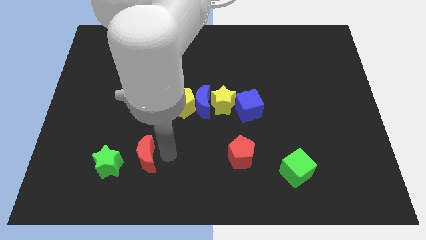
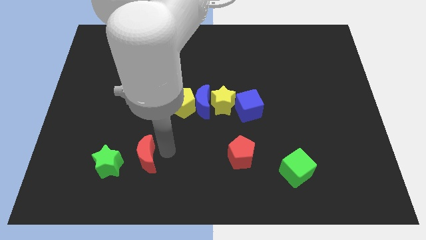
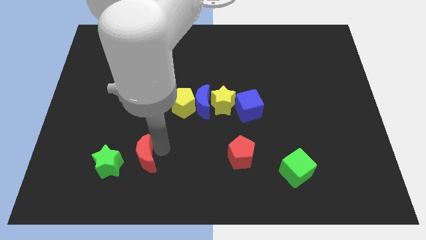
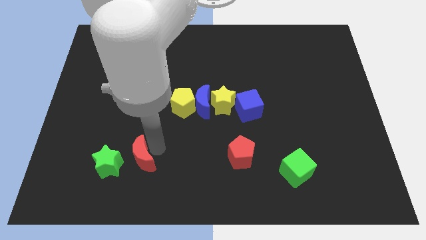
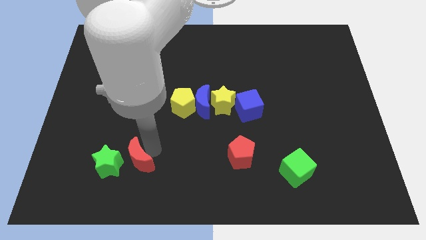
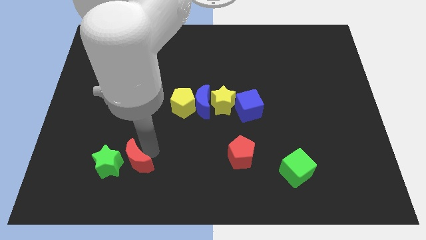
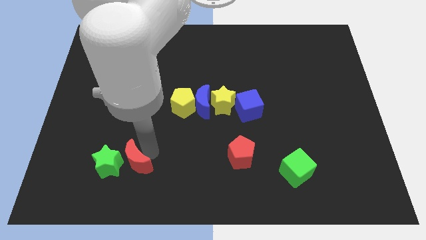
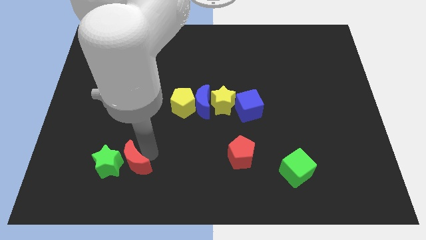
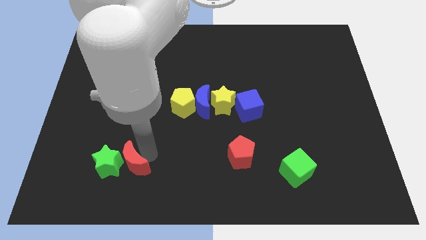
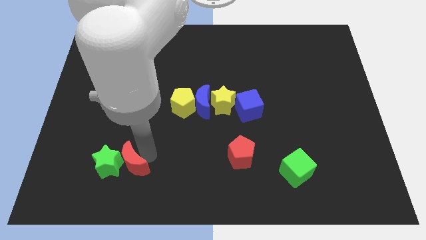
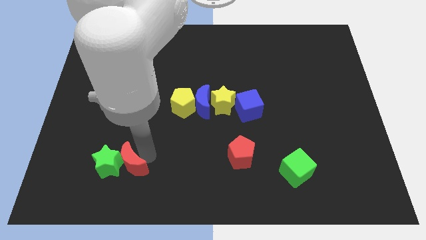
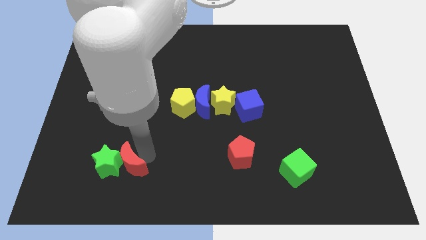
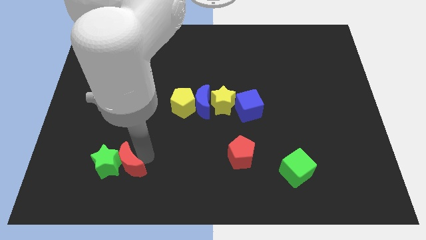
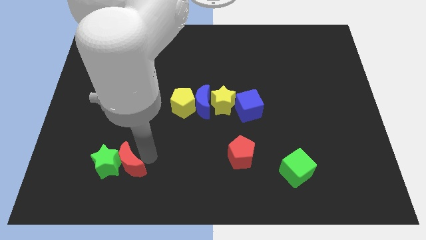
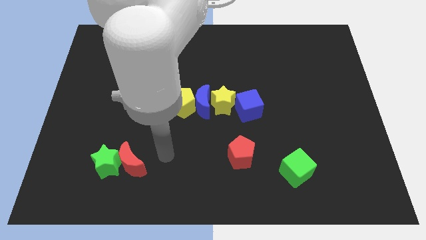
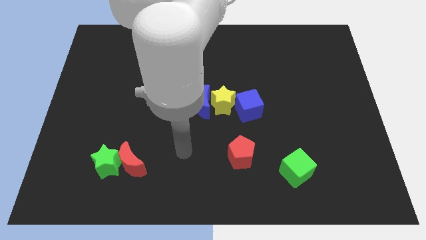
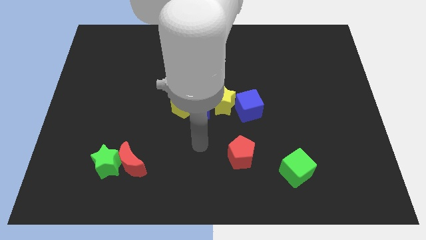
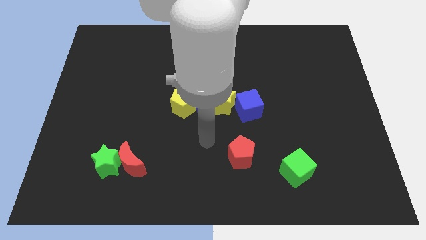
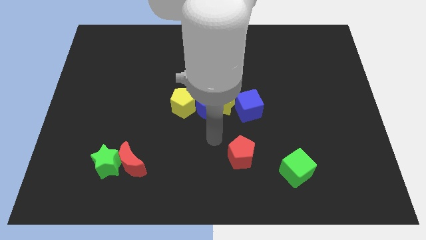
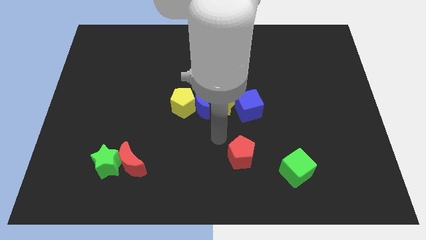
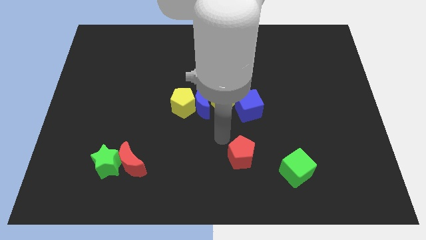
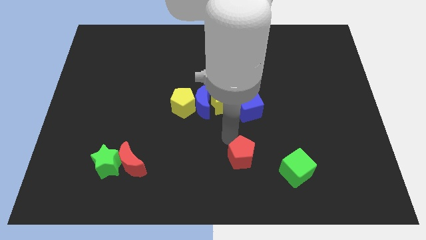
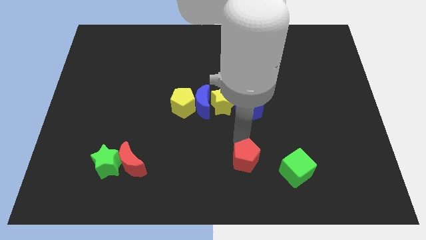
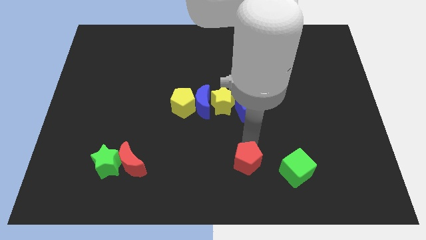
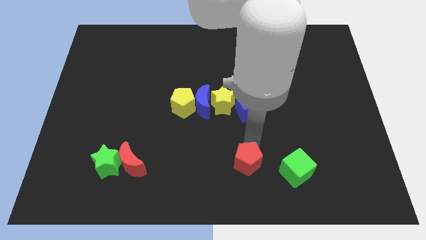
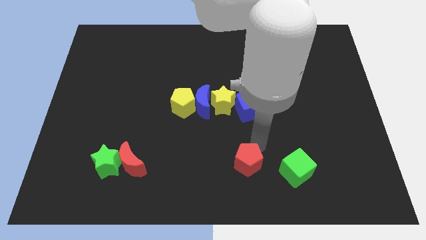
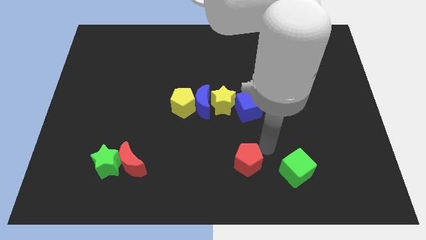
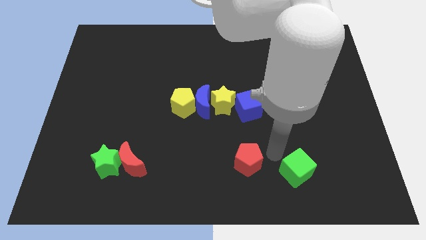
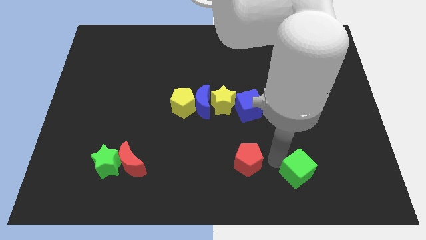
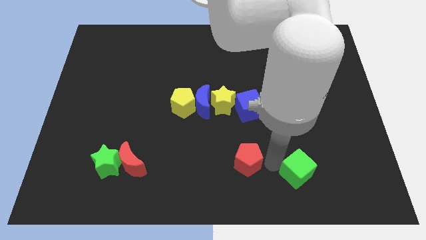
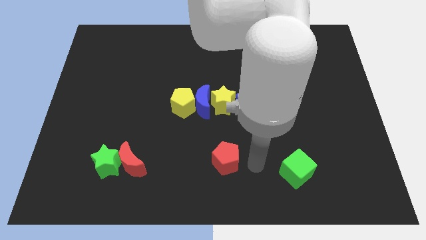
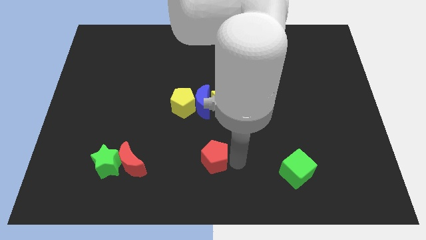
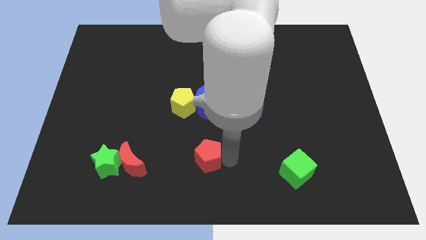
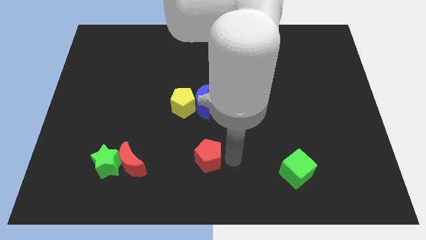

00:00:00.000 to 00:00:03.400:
put the red pentagon below the blue crescent

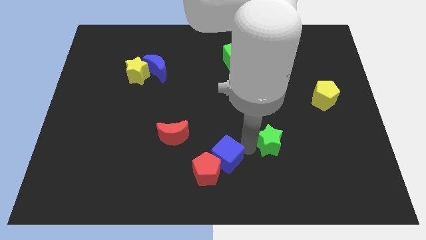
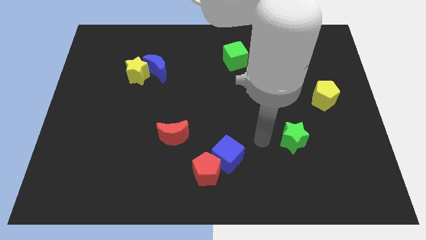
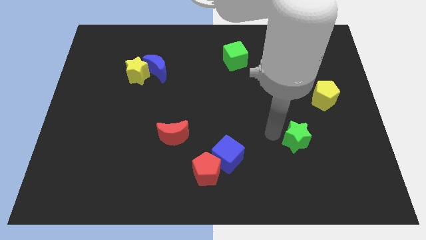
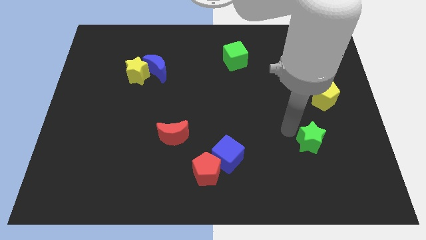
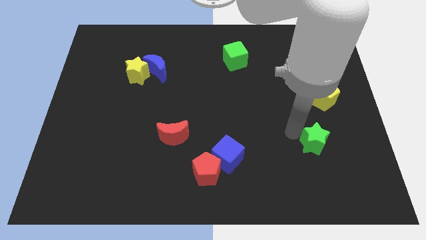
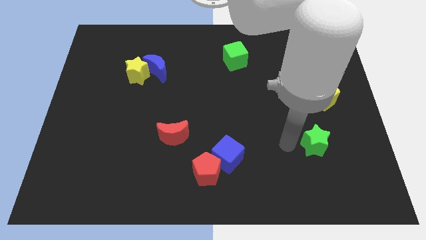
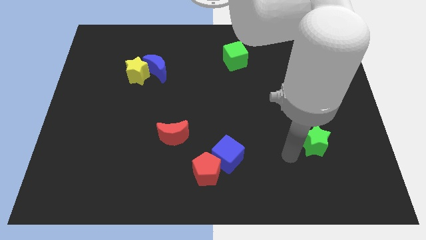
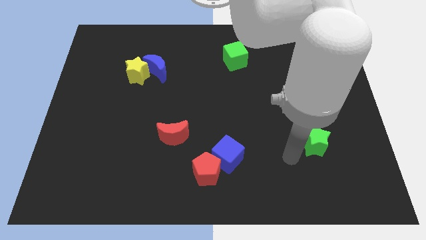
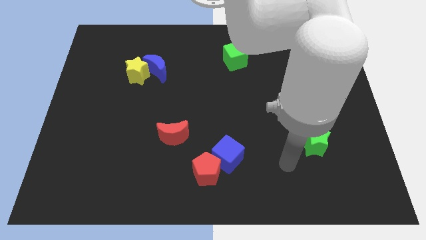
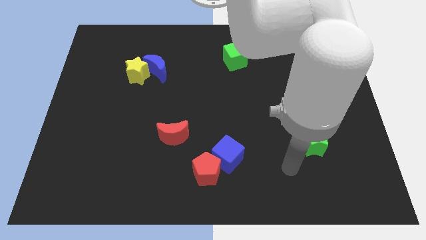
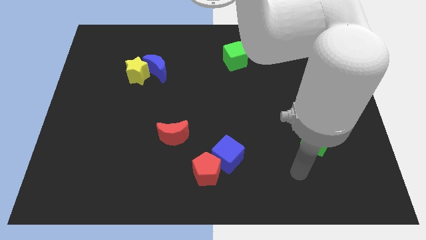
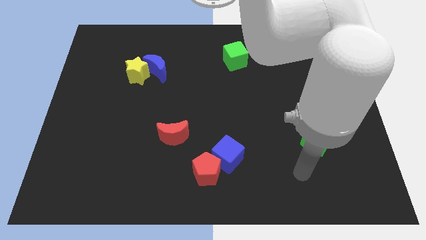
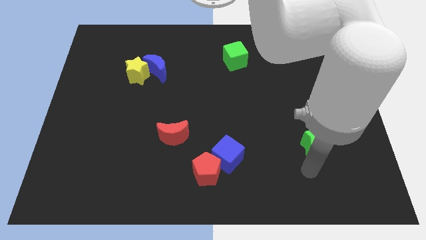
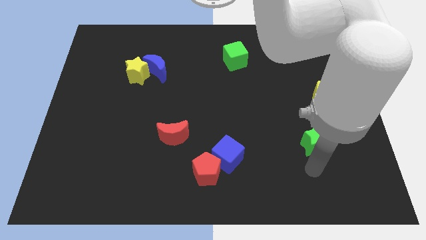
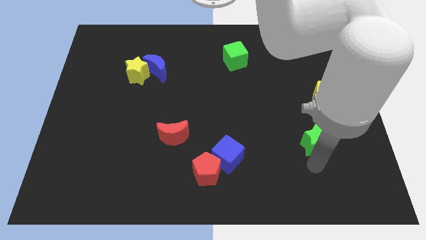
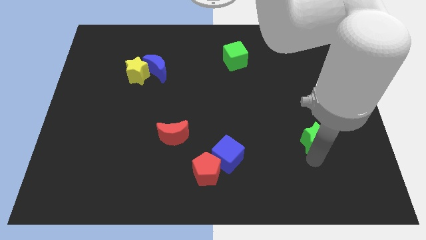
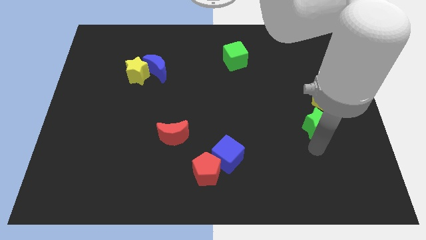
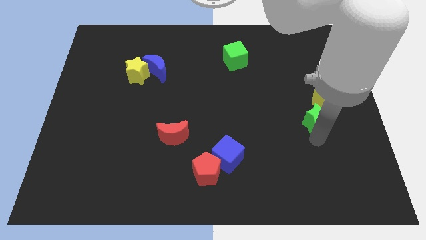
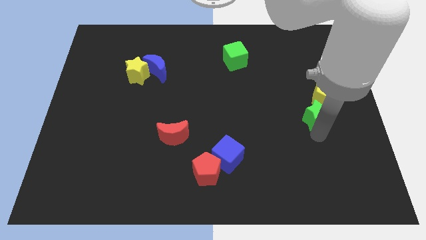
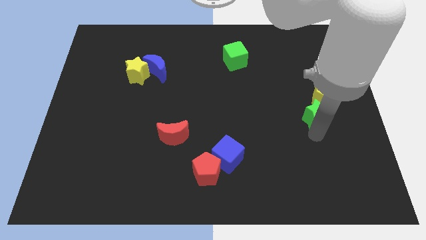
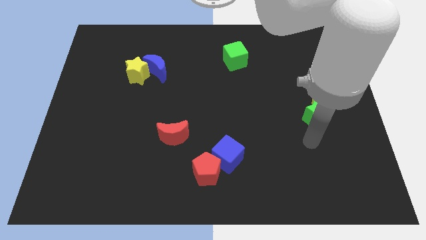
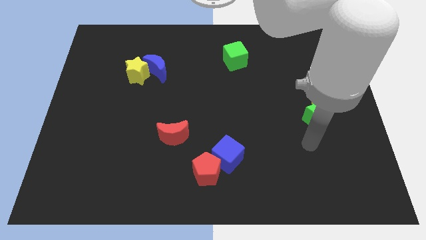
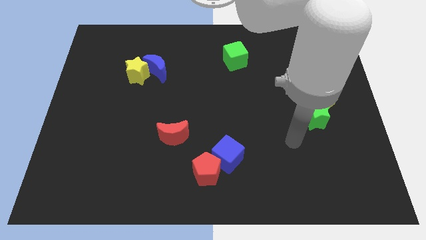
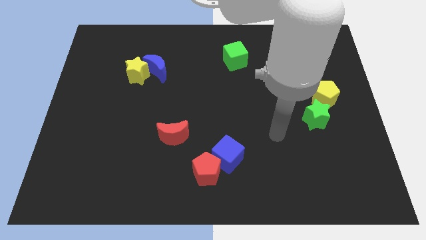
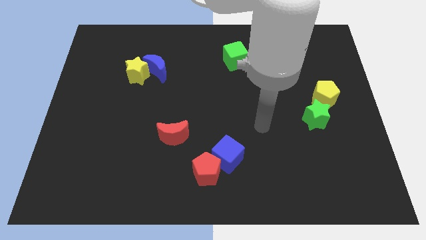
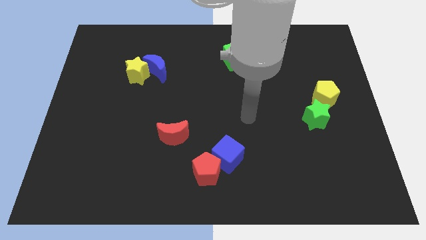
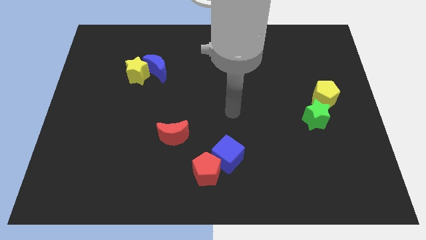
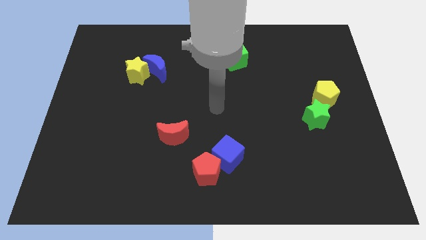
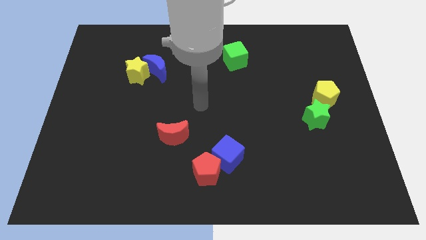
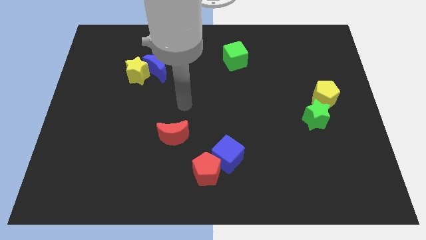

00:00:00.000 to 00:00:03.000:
push the green star towards the bottom of the yellow pentagon

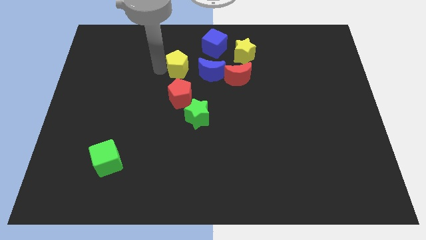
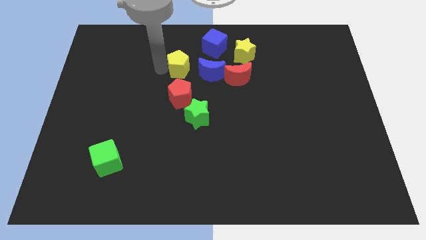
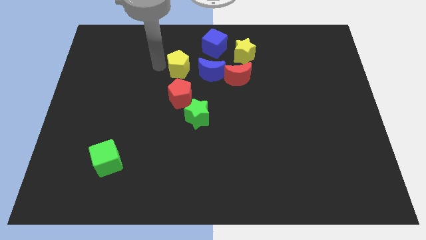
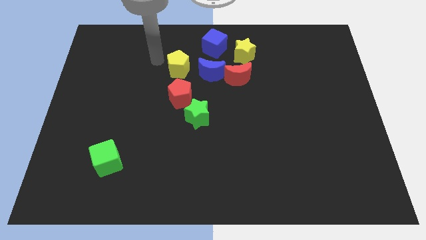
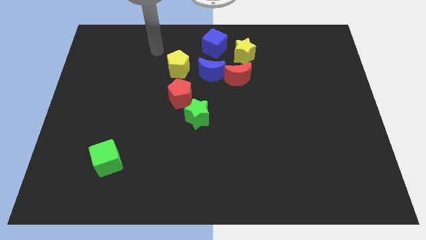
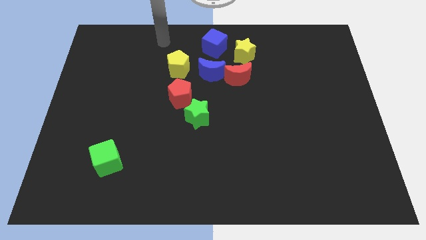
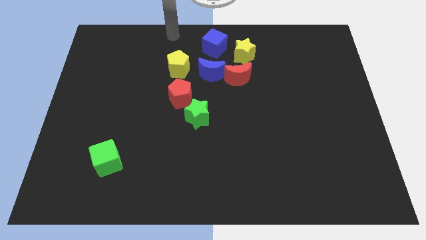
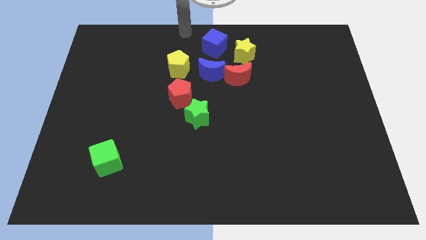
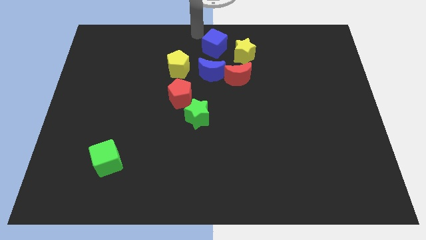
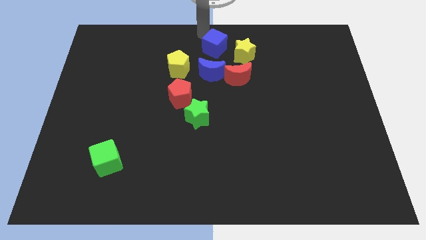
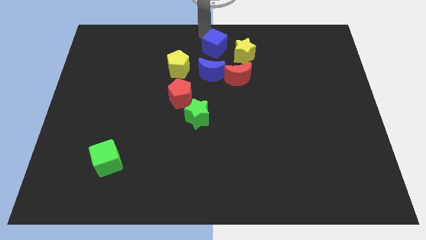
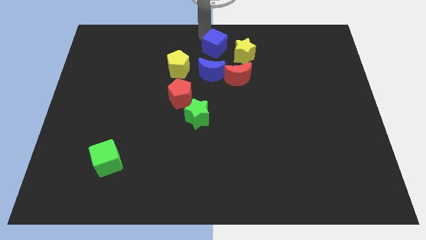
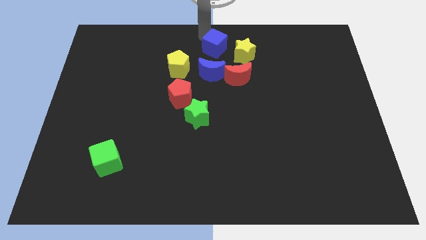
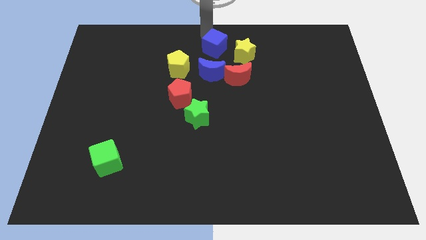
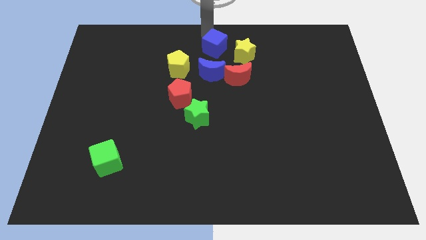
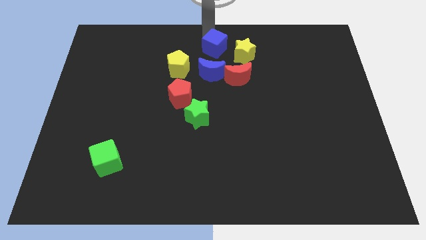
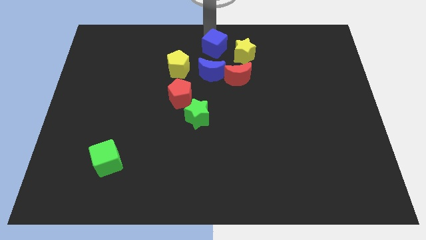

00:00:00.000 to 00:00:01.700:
move your arm away from the yellow pentagon

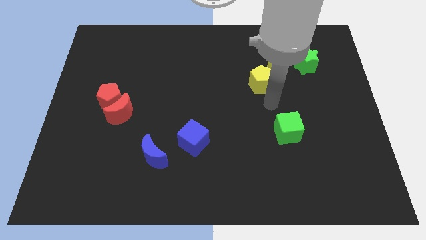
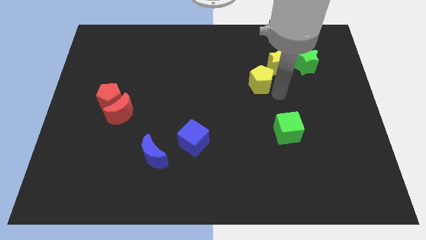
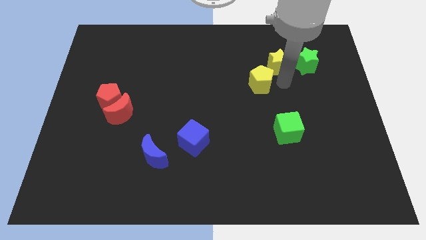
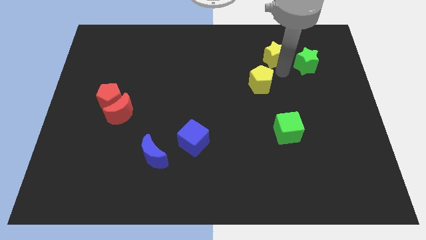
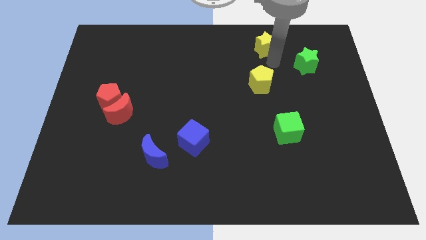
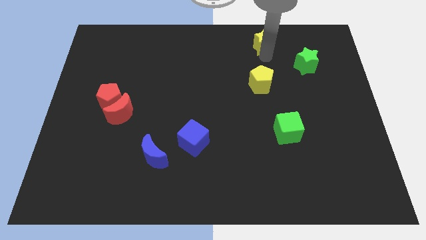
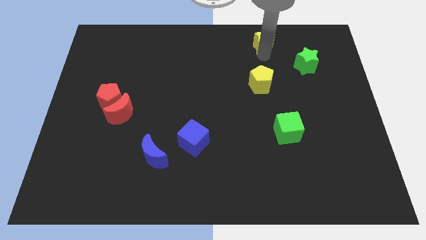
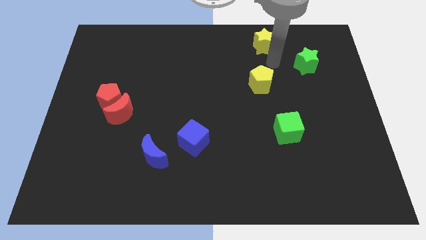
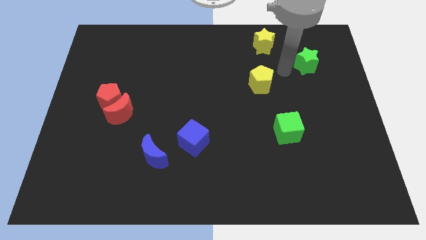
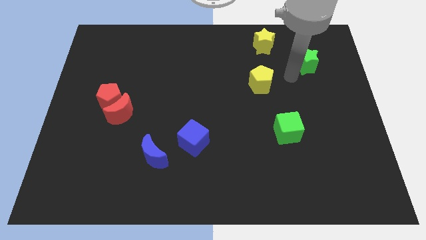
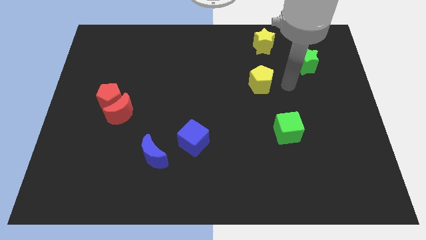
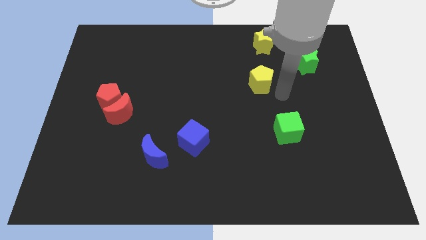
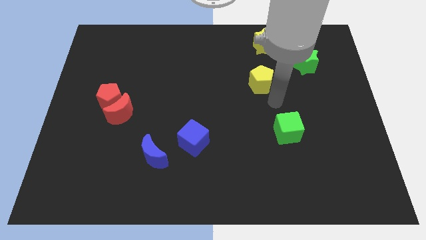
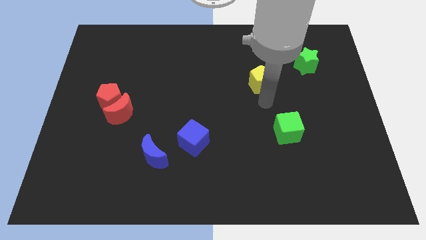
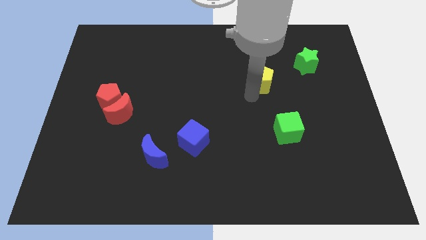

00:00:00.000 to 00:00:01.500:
push the star to the top of the board
